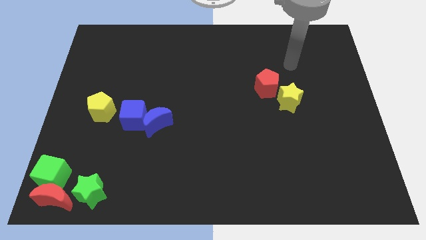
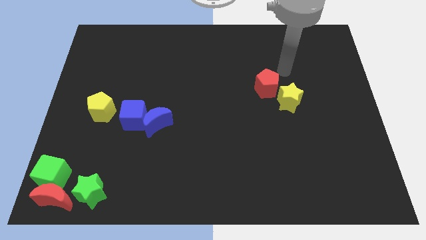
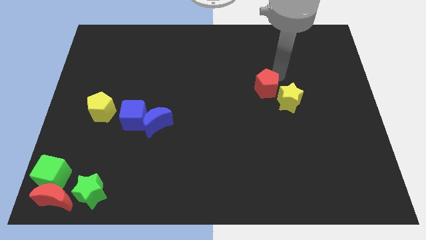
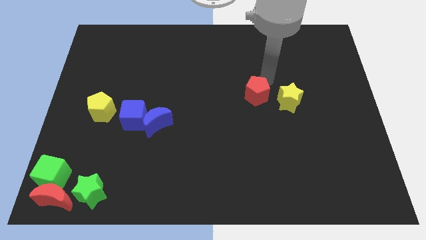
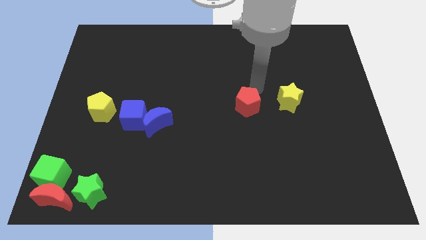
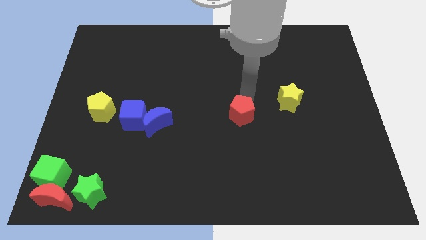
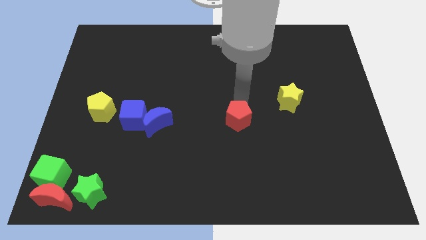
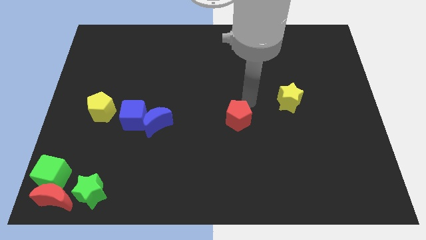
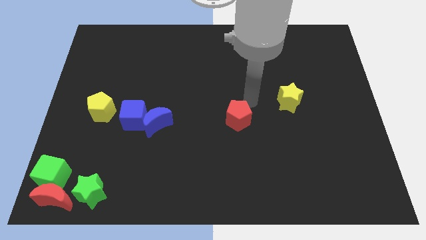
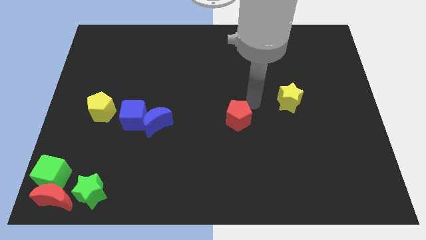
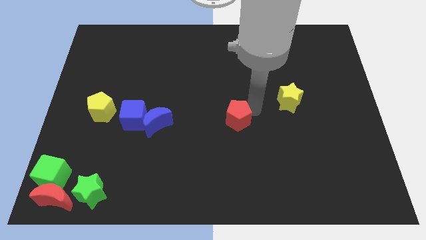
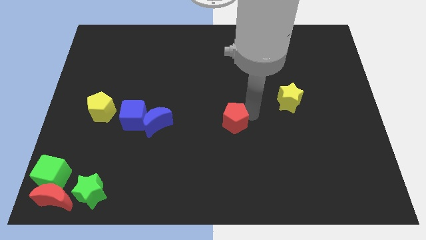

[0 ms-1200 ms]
push the red pentagon to the right of the blue crescent

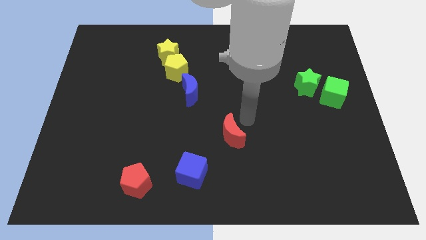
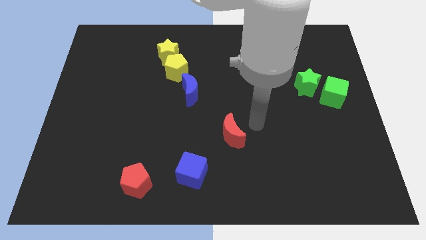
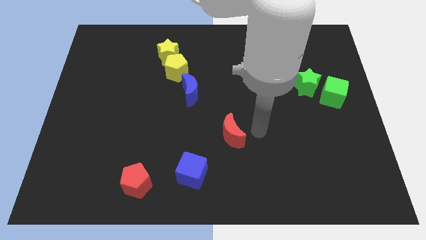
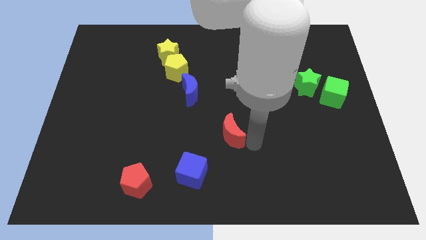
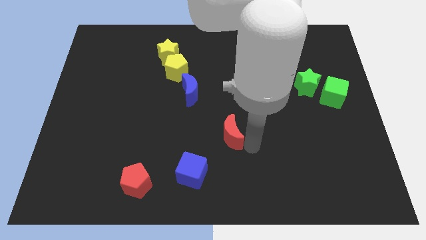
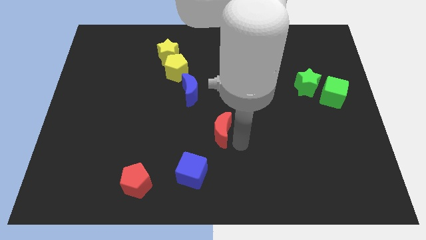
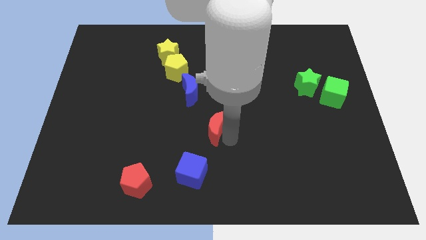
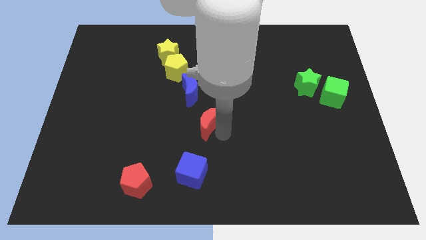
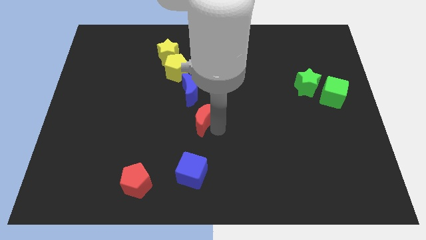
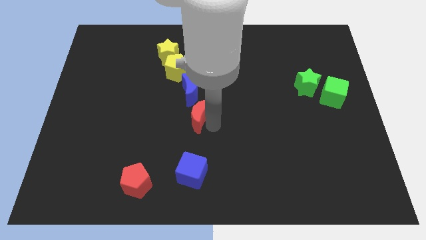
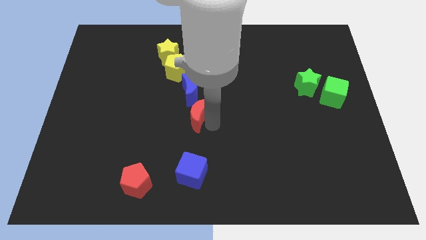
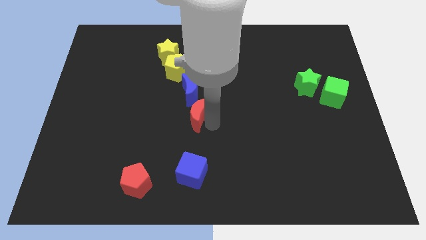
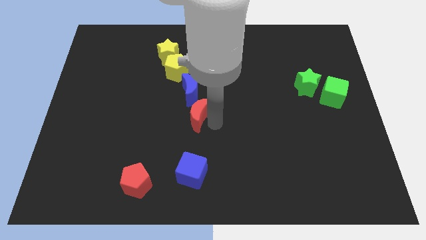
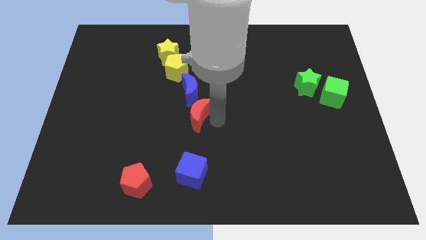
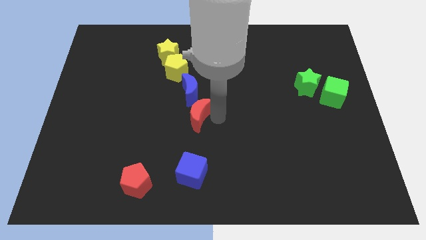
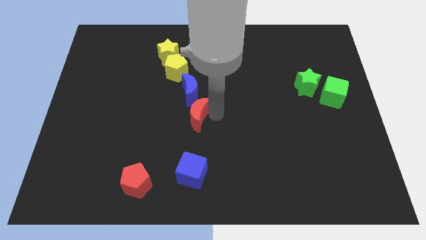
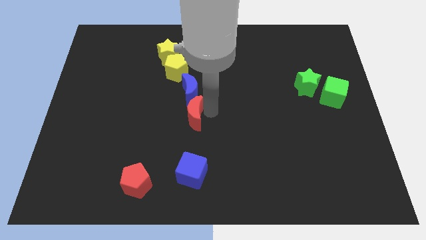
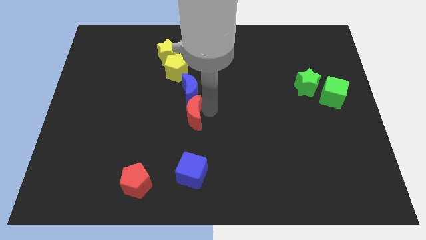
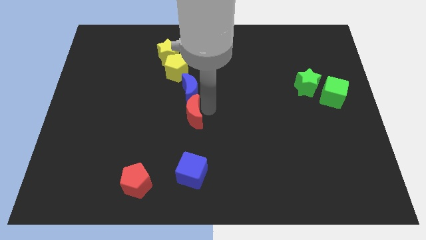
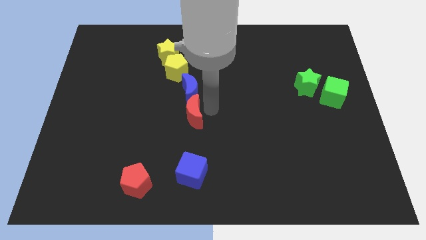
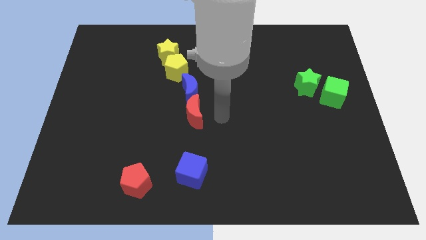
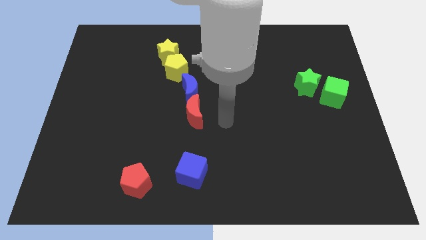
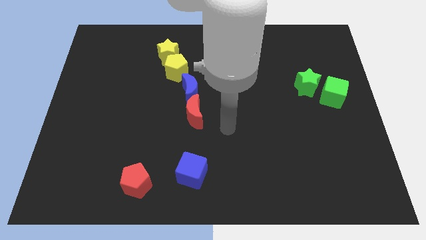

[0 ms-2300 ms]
place the red crescent vertical to the blue cube

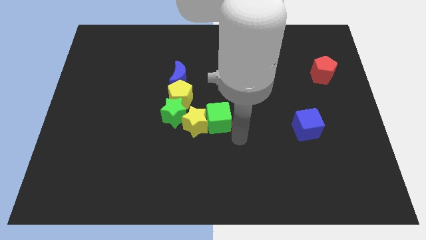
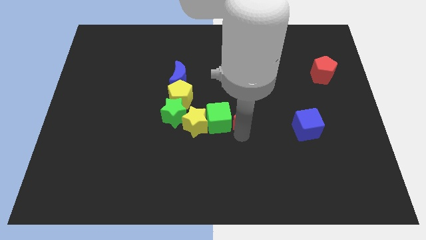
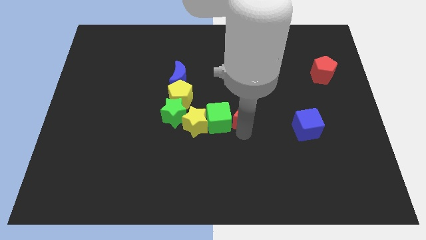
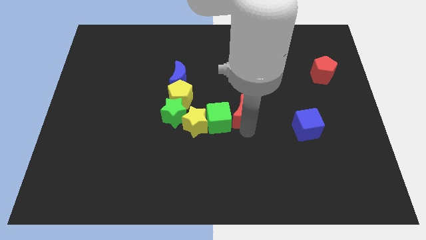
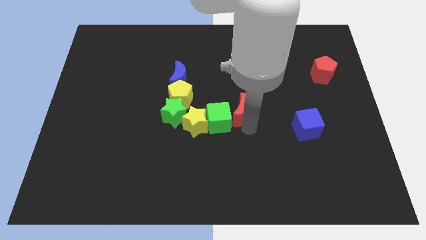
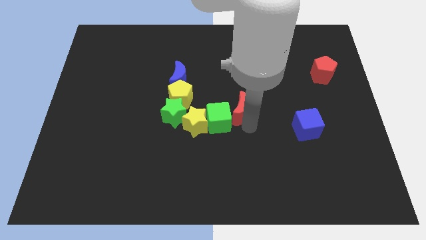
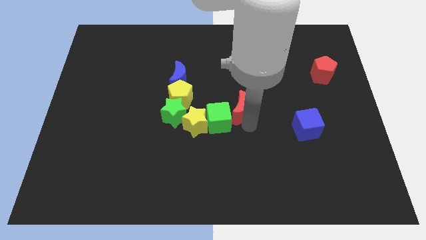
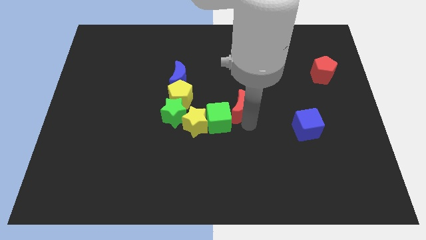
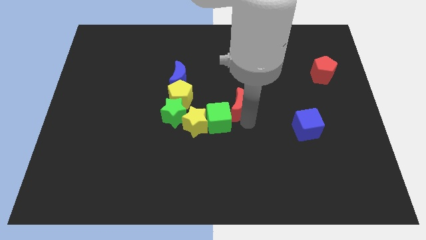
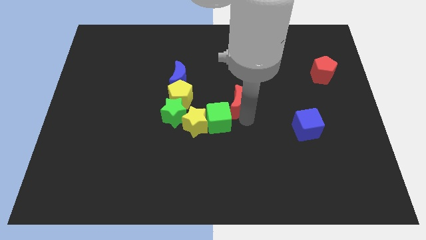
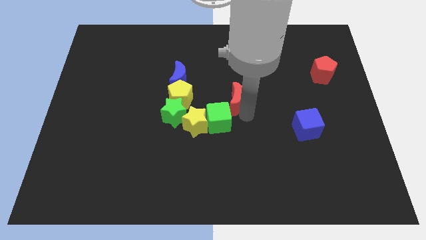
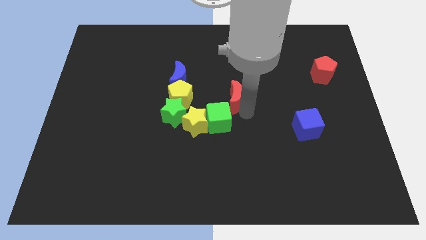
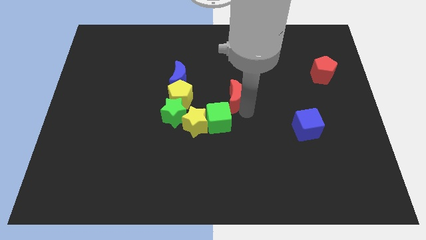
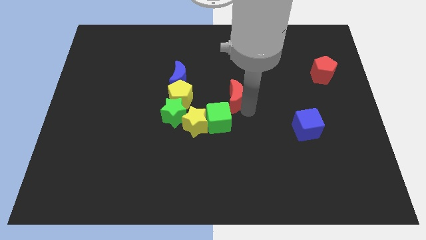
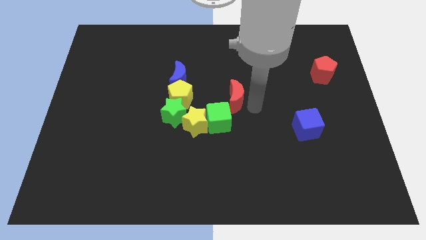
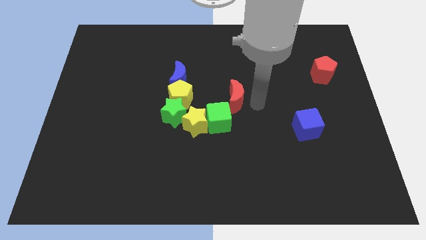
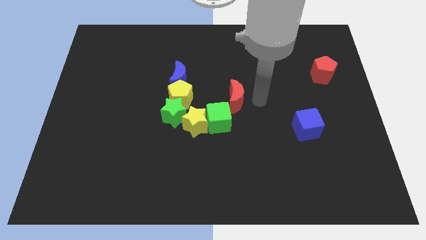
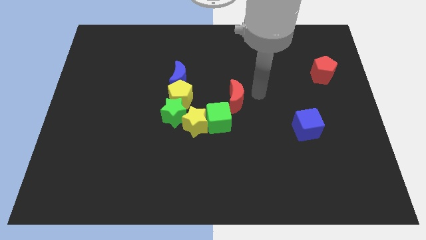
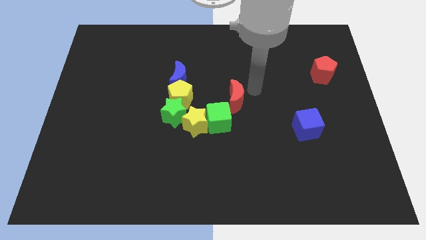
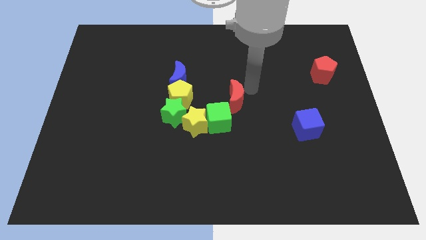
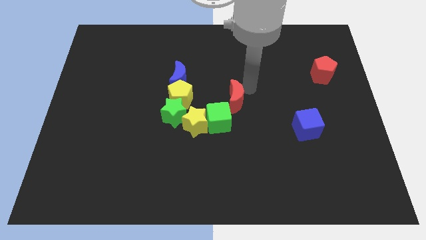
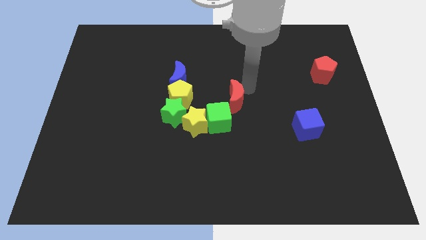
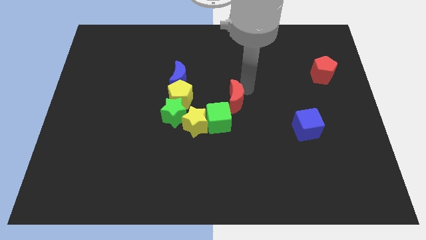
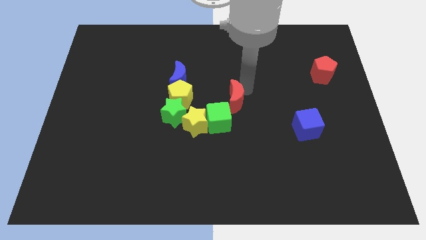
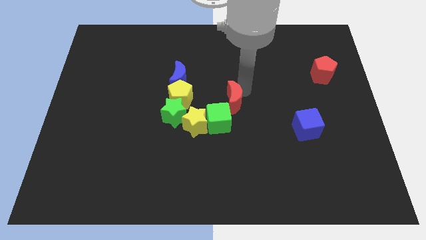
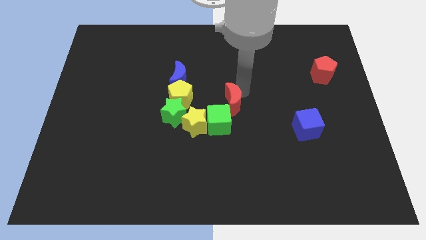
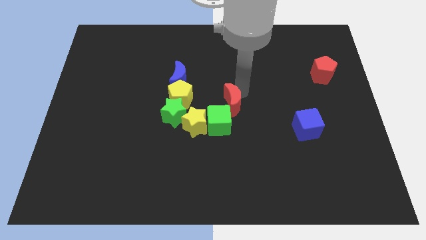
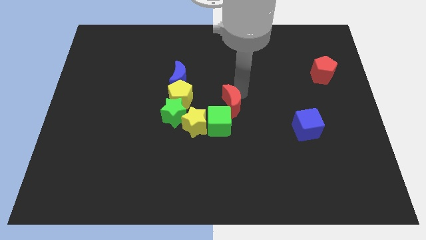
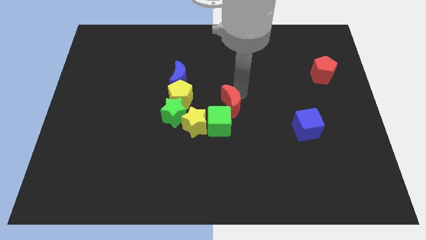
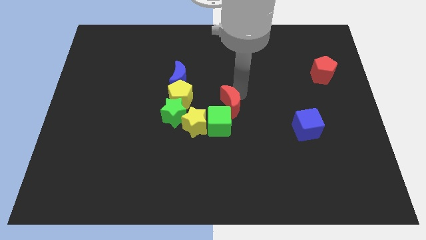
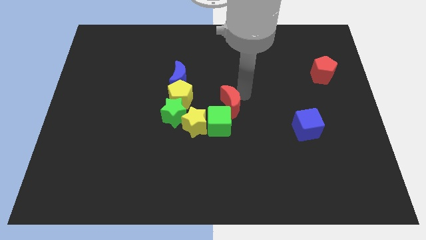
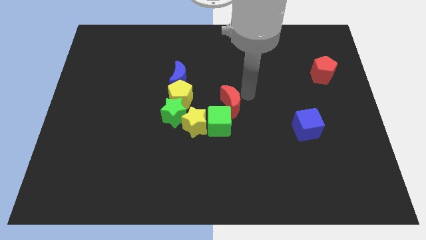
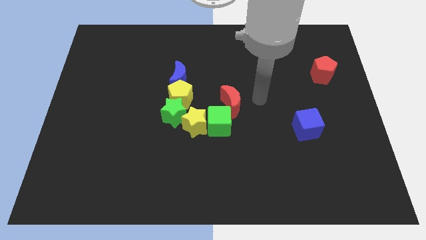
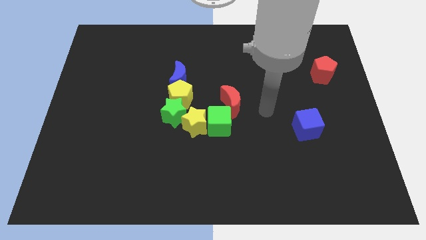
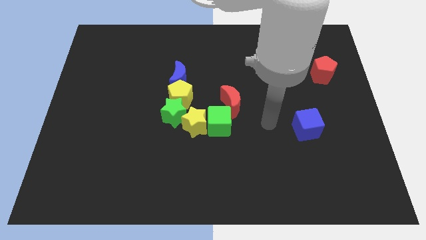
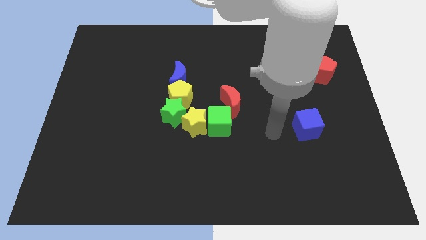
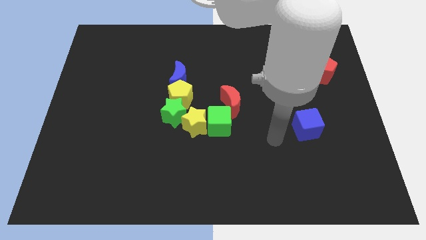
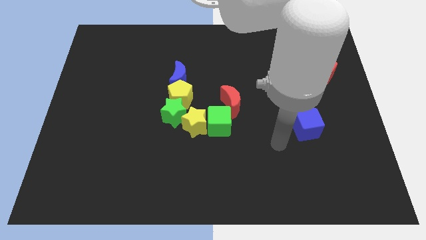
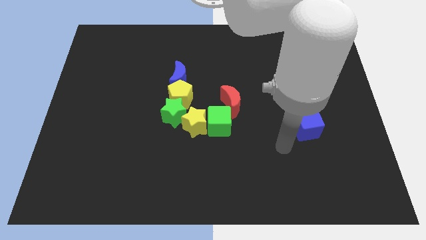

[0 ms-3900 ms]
push the red moon slightly to the top of the green cube

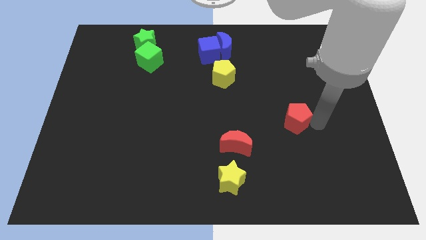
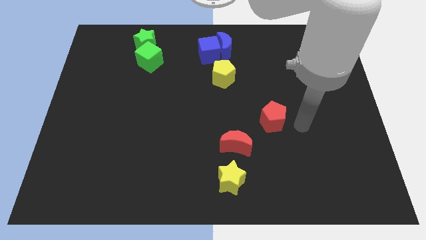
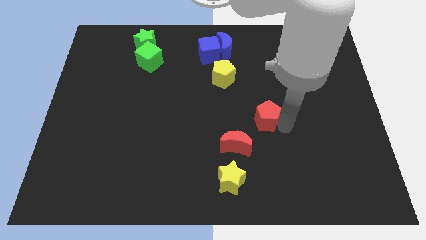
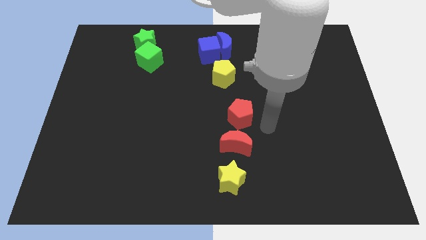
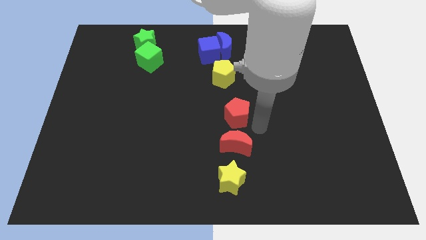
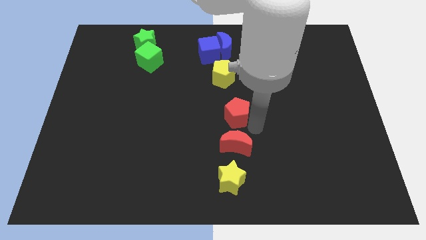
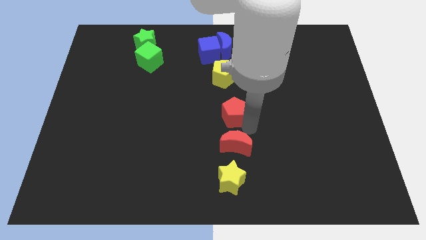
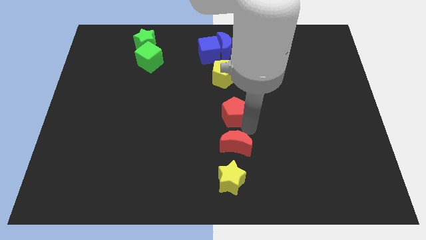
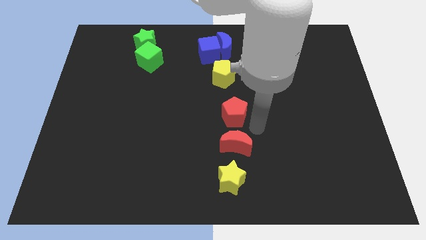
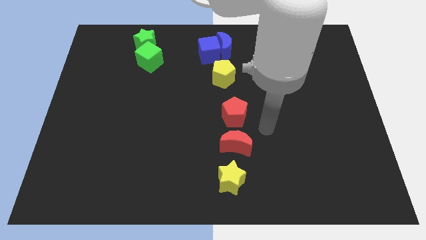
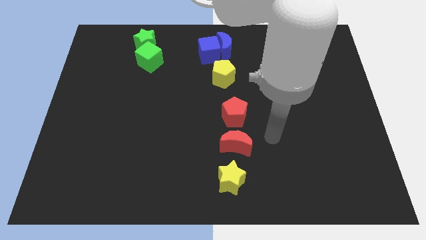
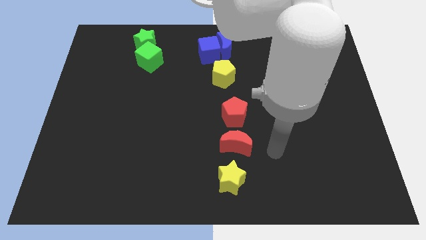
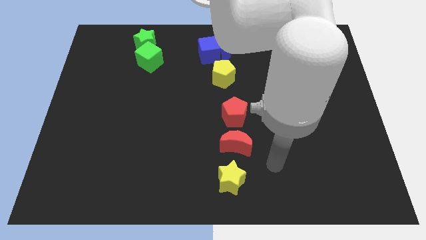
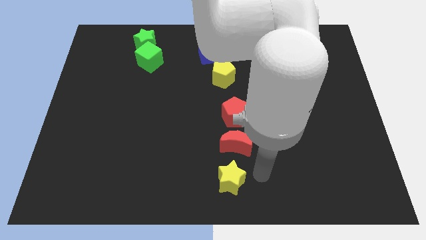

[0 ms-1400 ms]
place the red pentagon above the red moon

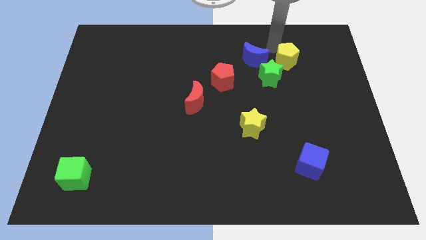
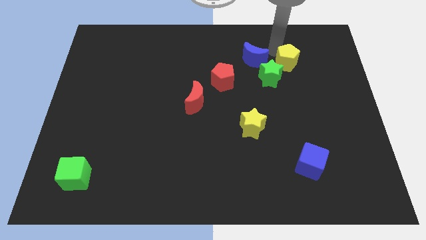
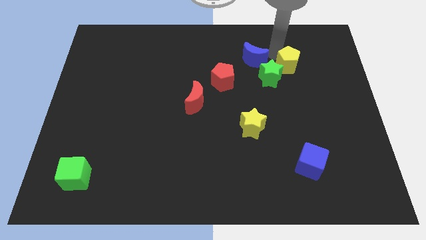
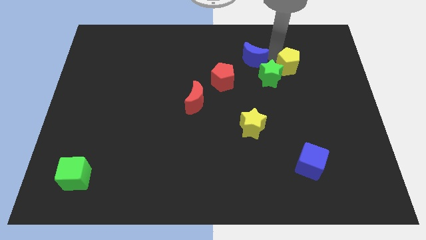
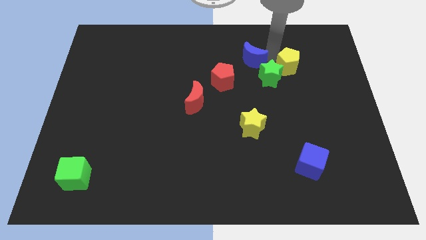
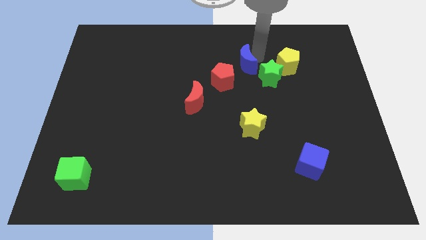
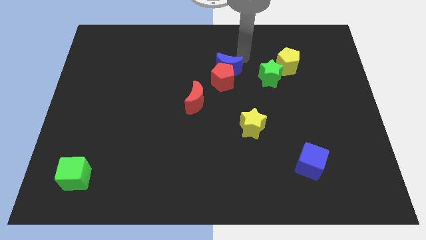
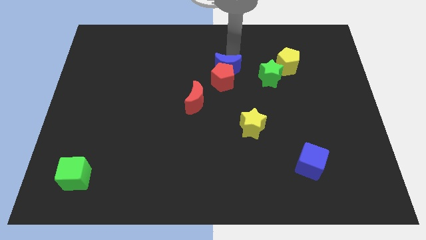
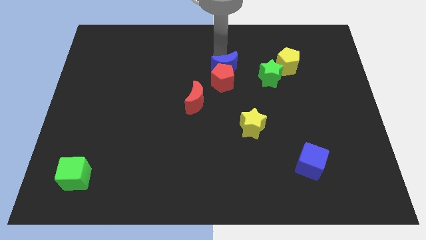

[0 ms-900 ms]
drag the blue moon on top of the red pentagon
